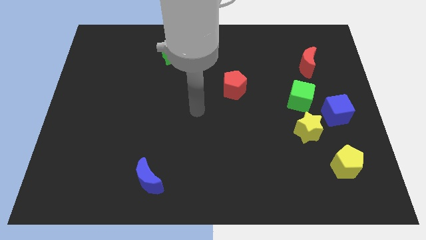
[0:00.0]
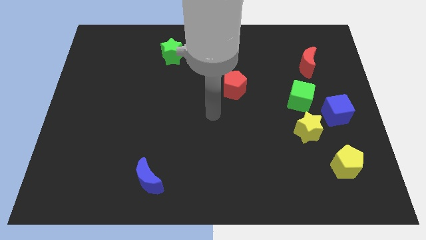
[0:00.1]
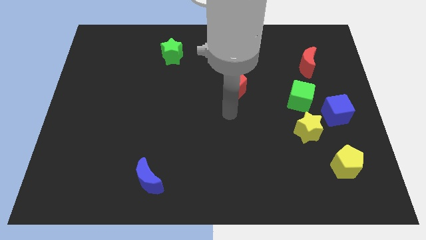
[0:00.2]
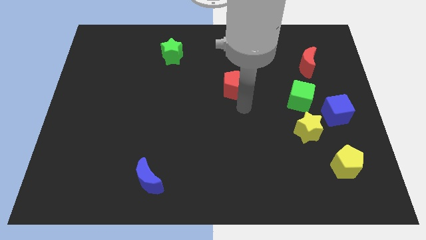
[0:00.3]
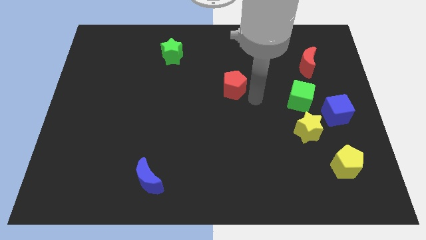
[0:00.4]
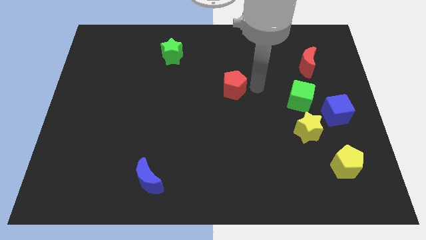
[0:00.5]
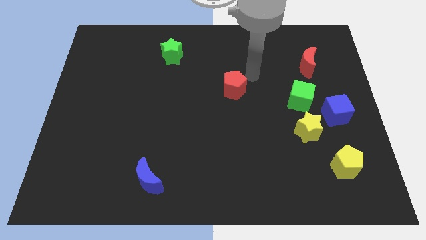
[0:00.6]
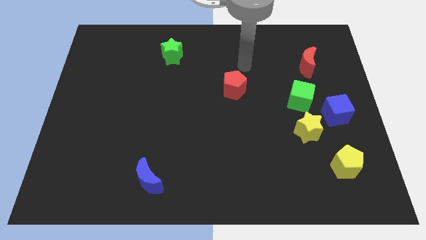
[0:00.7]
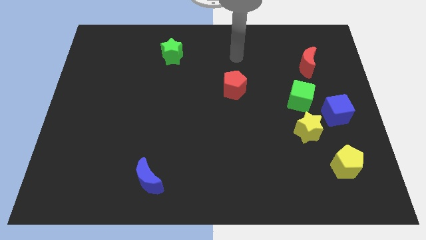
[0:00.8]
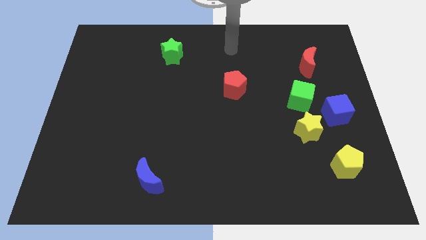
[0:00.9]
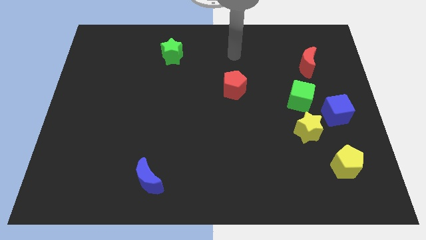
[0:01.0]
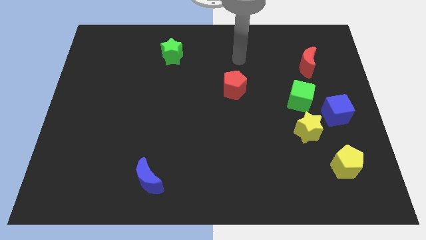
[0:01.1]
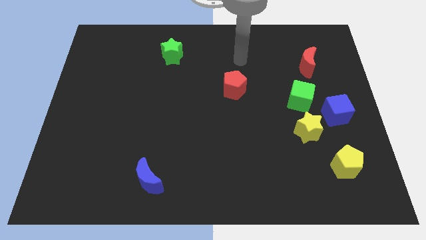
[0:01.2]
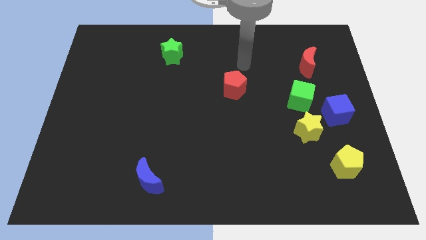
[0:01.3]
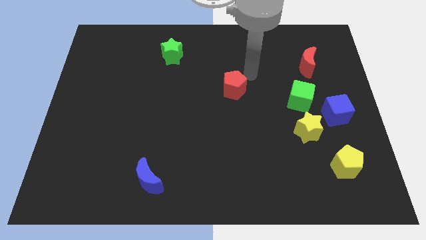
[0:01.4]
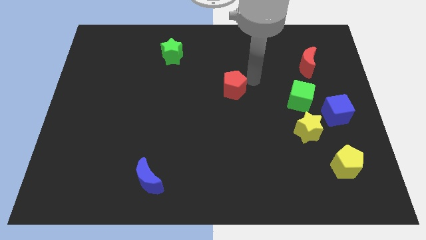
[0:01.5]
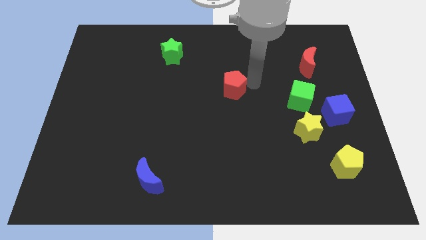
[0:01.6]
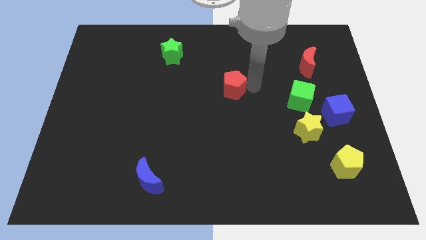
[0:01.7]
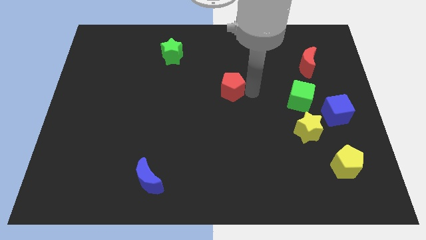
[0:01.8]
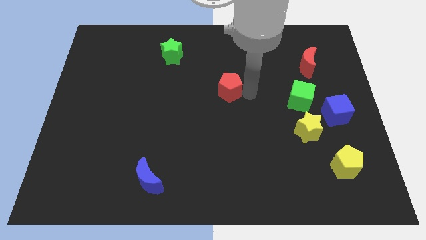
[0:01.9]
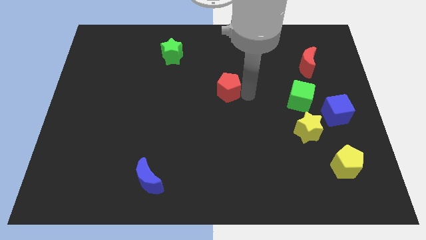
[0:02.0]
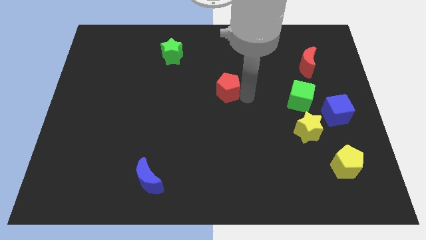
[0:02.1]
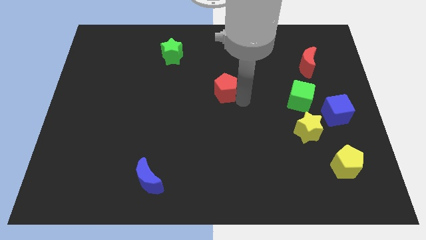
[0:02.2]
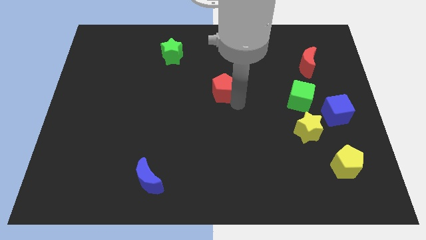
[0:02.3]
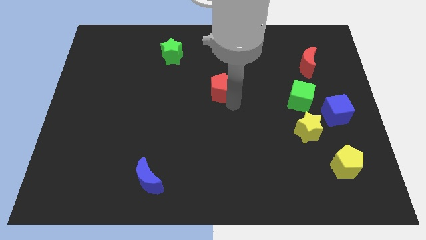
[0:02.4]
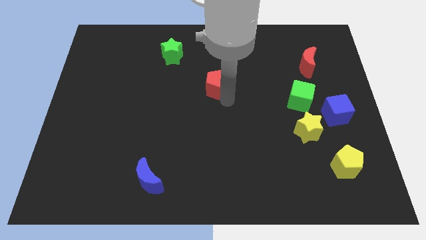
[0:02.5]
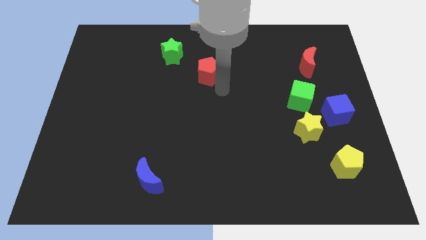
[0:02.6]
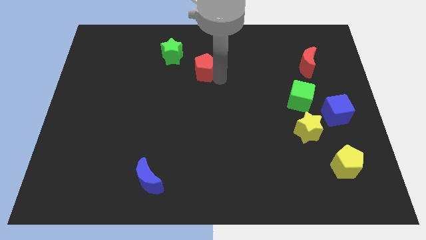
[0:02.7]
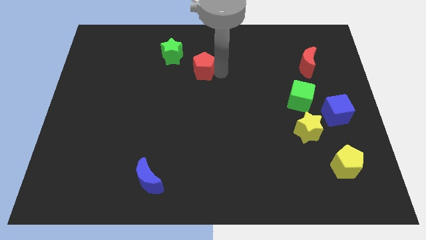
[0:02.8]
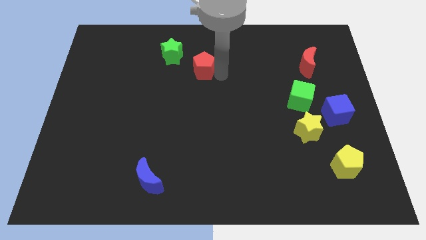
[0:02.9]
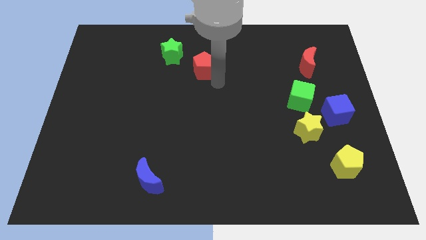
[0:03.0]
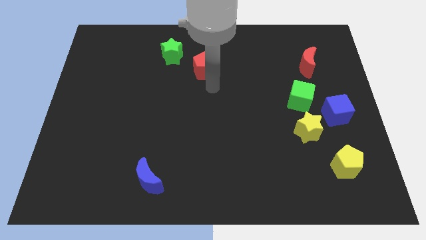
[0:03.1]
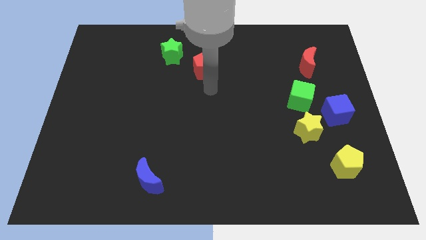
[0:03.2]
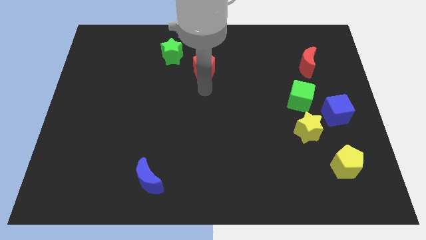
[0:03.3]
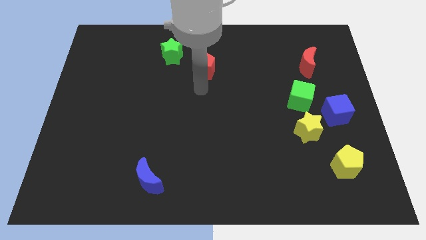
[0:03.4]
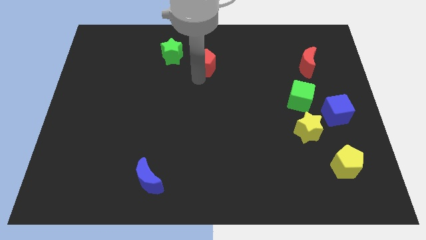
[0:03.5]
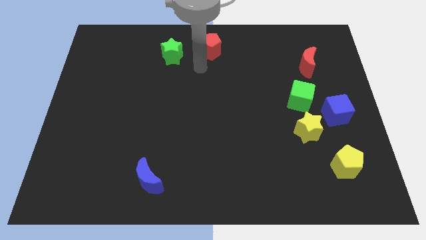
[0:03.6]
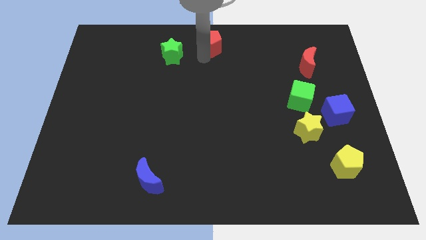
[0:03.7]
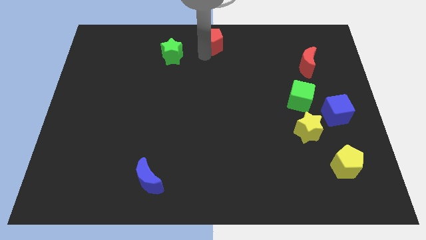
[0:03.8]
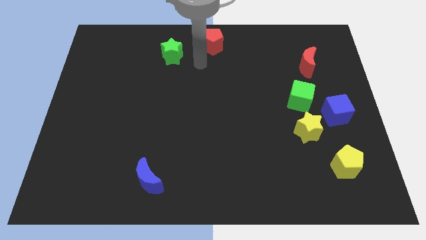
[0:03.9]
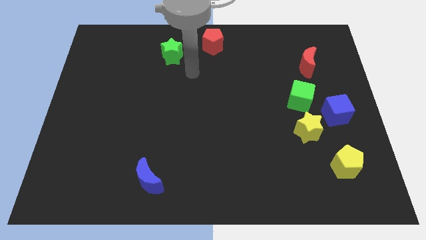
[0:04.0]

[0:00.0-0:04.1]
push red pentagon towards top center

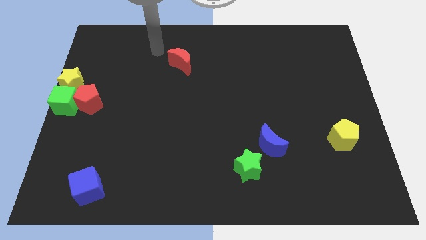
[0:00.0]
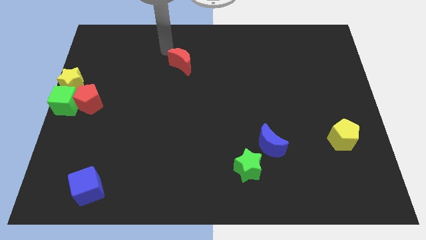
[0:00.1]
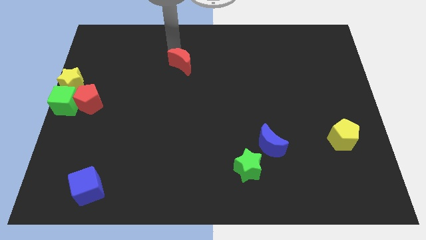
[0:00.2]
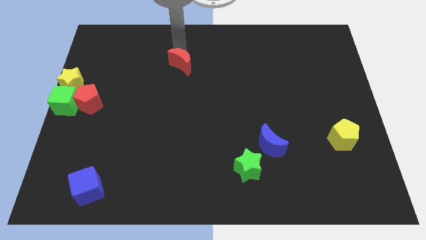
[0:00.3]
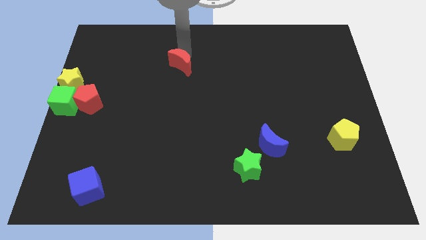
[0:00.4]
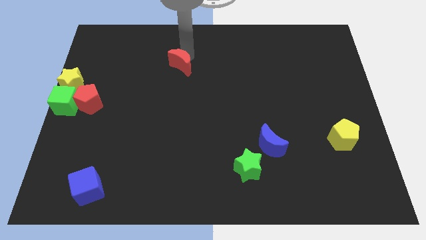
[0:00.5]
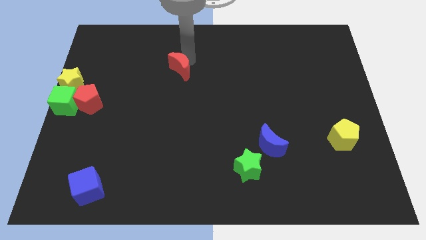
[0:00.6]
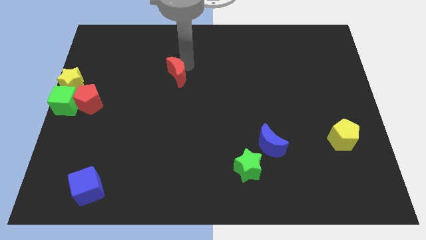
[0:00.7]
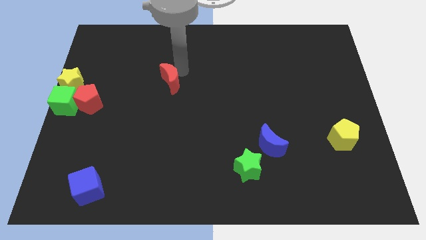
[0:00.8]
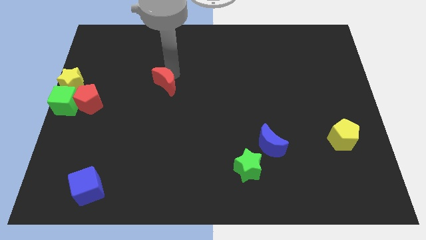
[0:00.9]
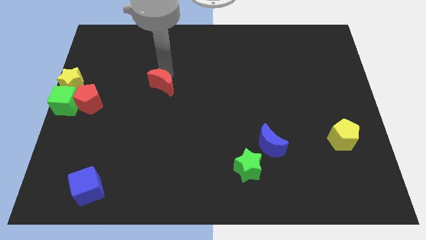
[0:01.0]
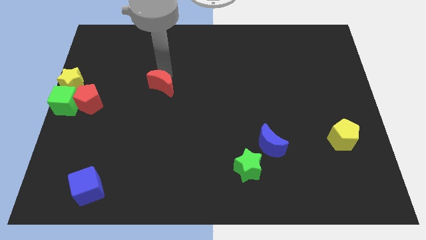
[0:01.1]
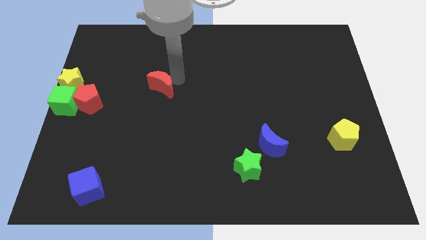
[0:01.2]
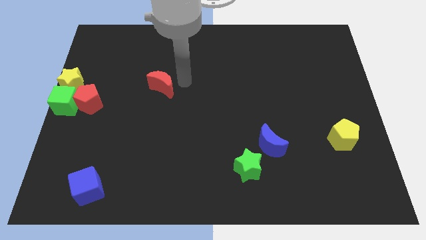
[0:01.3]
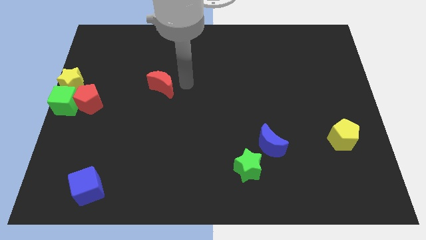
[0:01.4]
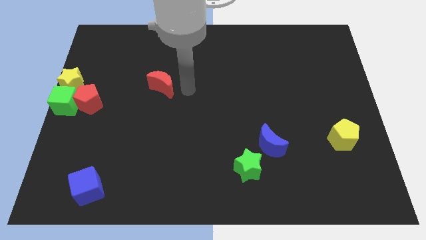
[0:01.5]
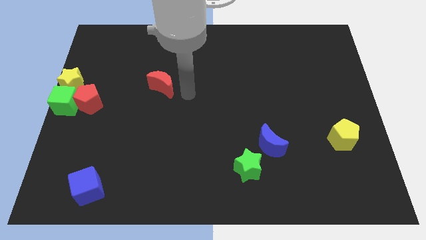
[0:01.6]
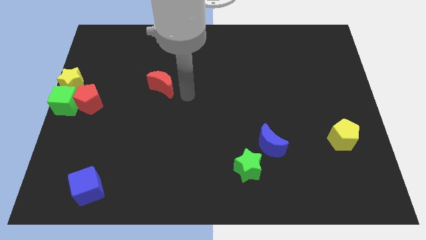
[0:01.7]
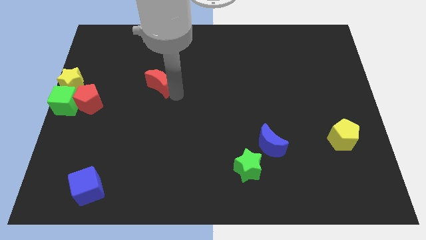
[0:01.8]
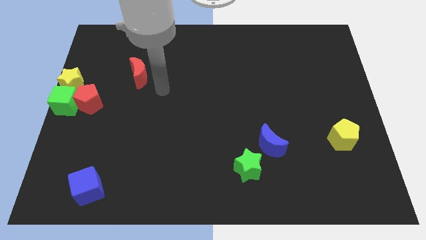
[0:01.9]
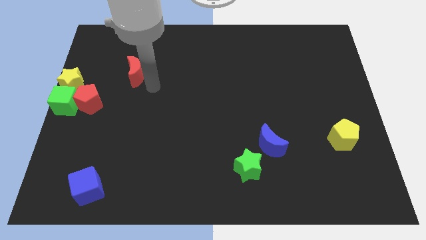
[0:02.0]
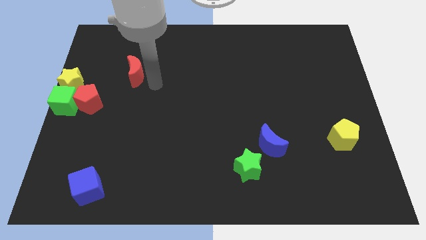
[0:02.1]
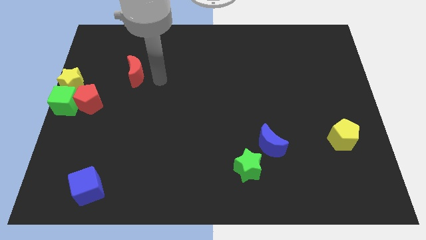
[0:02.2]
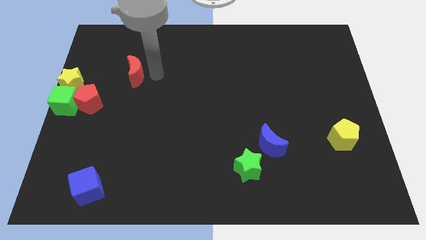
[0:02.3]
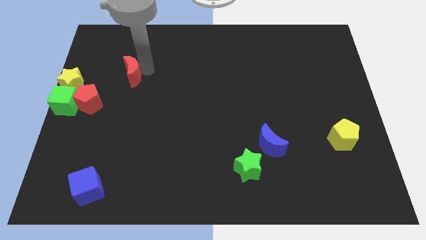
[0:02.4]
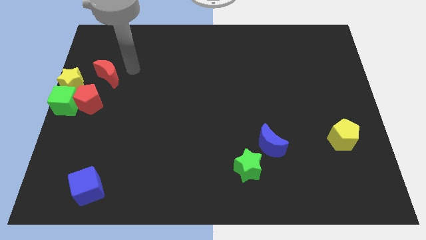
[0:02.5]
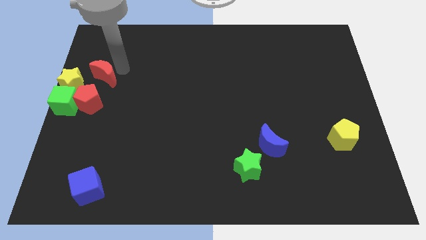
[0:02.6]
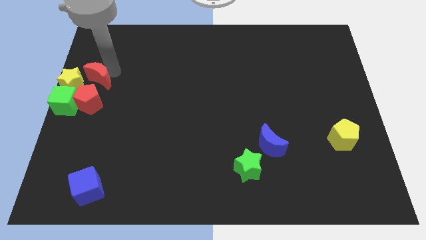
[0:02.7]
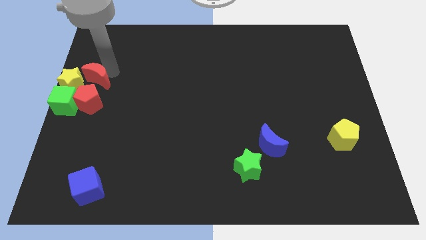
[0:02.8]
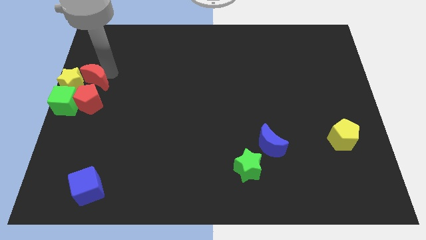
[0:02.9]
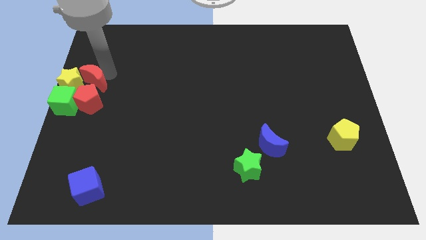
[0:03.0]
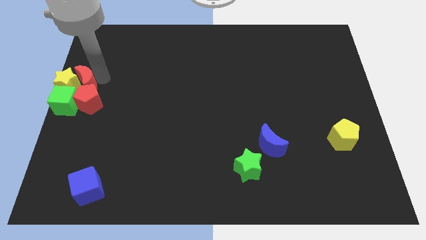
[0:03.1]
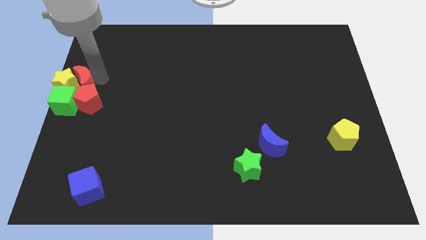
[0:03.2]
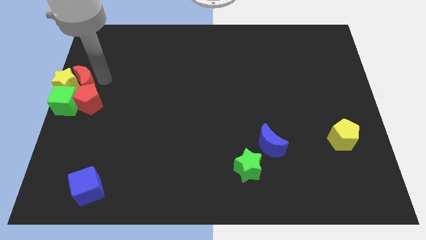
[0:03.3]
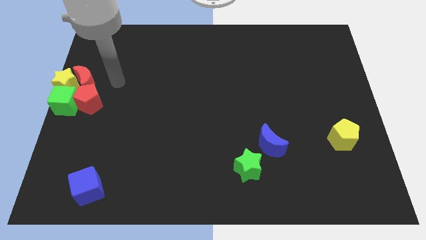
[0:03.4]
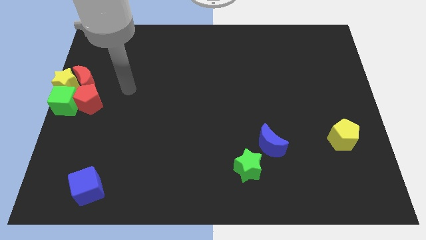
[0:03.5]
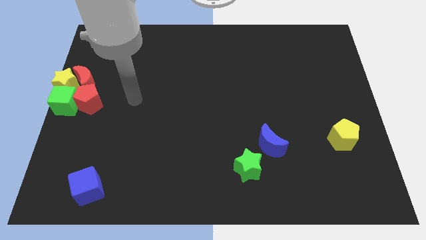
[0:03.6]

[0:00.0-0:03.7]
place the red crescent right side of the yellow star

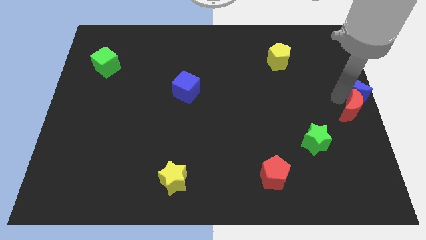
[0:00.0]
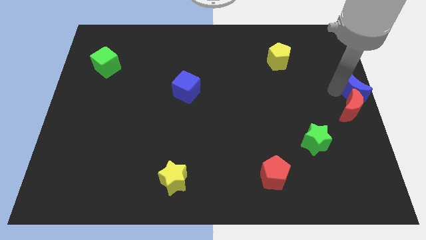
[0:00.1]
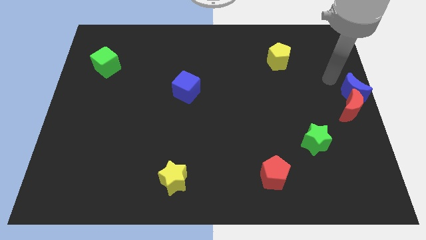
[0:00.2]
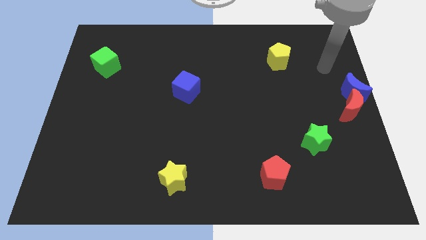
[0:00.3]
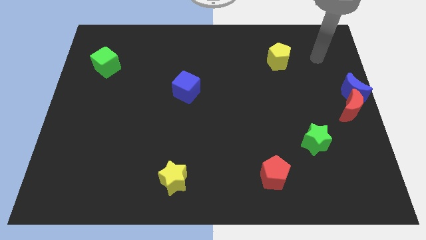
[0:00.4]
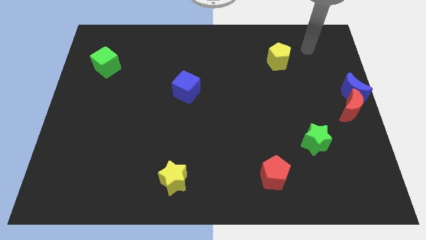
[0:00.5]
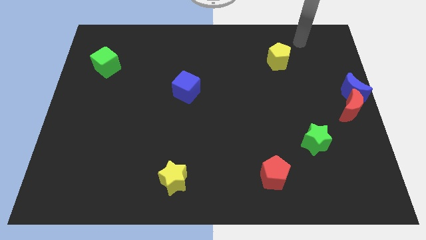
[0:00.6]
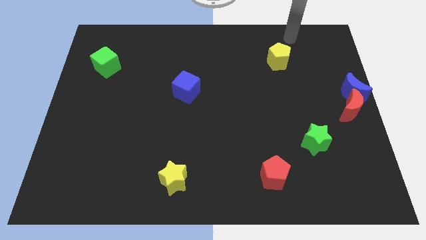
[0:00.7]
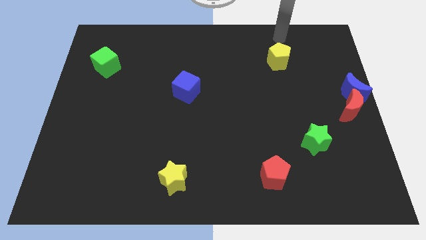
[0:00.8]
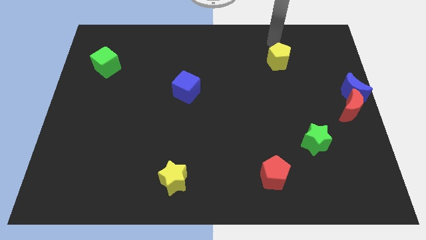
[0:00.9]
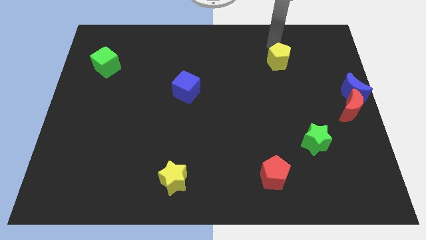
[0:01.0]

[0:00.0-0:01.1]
move your arm away from the red moon

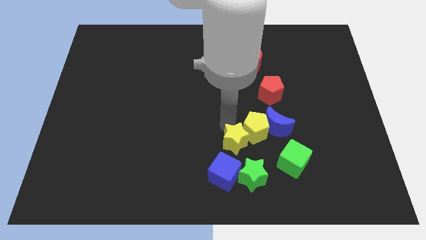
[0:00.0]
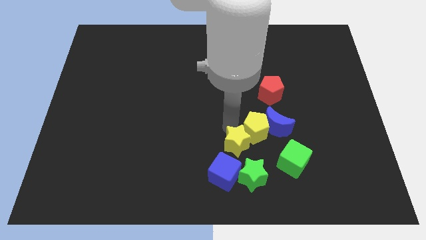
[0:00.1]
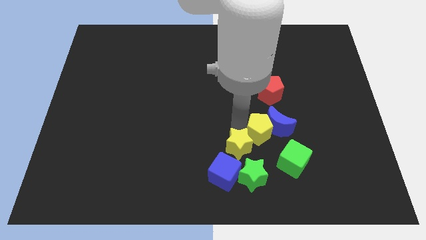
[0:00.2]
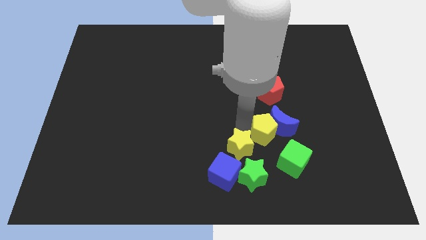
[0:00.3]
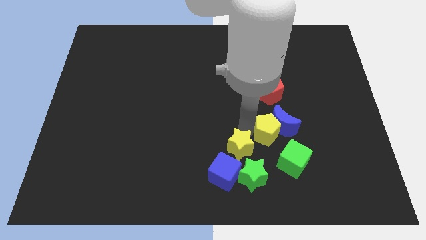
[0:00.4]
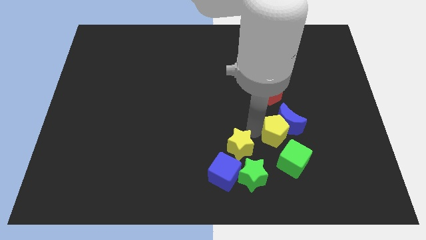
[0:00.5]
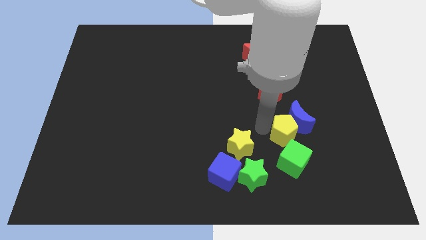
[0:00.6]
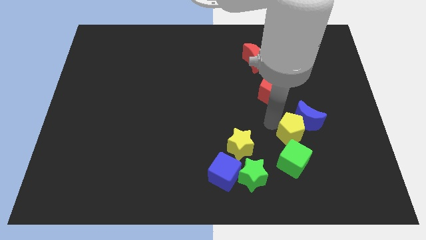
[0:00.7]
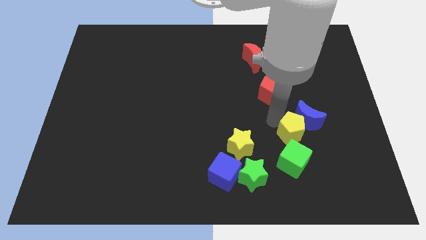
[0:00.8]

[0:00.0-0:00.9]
separate the yellow star from the yellow pentagon and blue crescent
